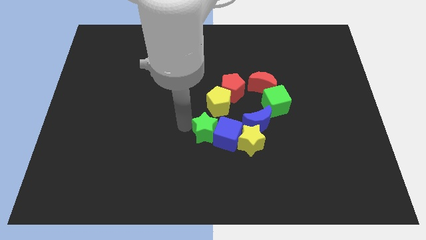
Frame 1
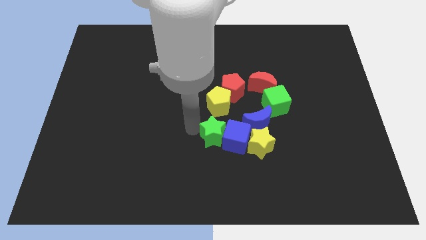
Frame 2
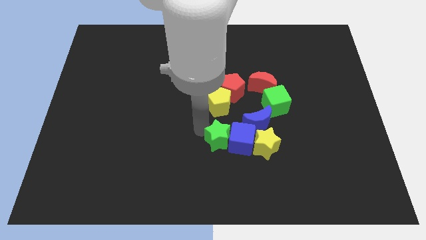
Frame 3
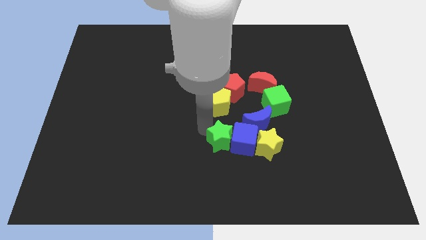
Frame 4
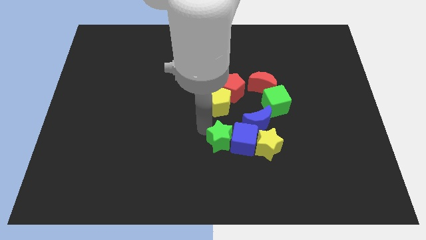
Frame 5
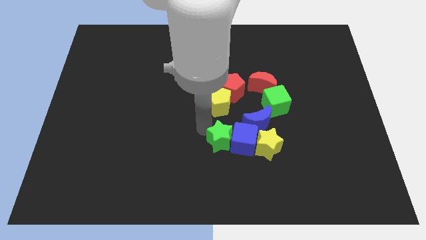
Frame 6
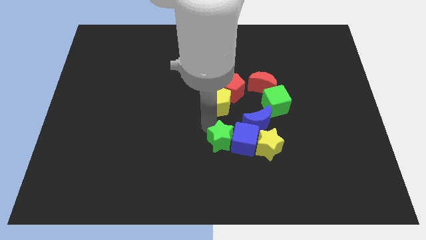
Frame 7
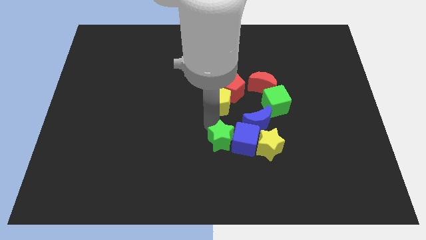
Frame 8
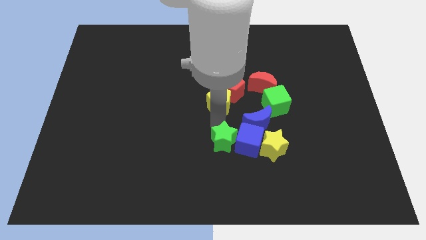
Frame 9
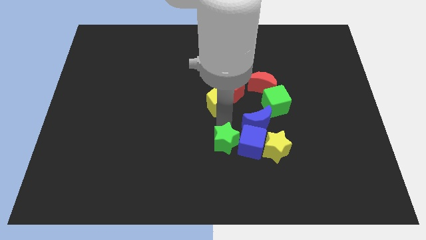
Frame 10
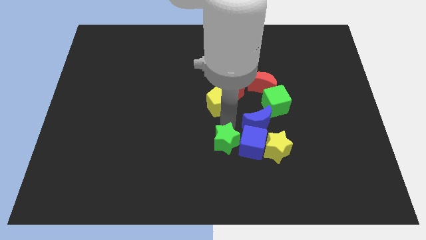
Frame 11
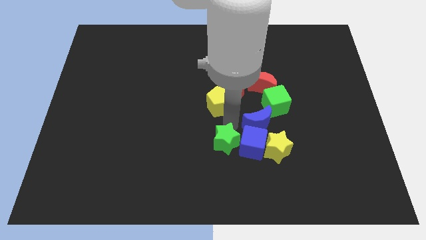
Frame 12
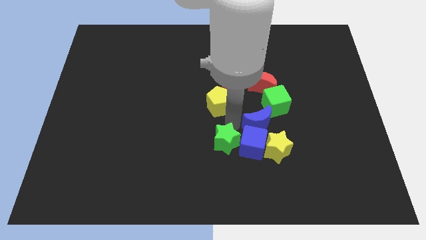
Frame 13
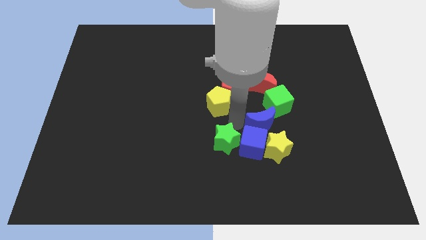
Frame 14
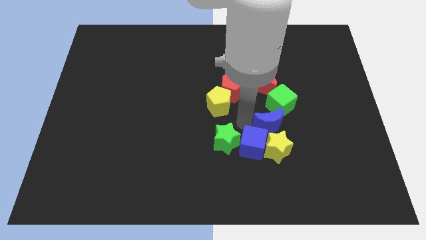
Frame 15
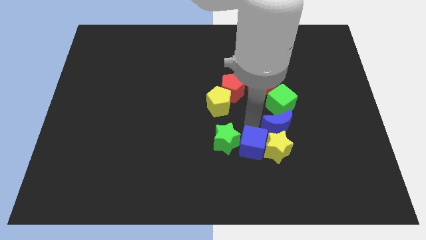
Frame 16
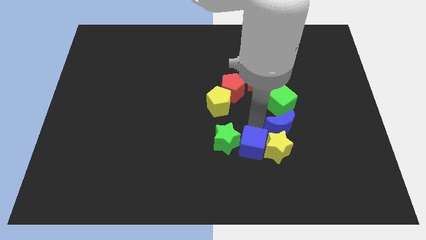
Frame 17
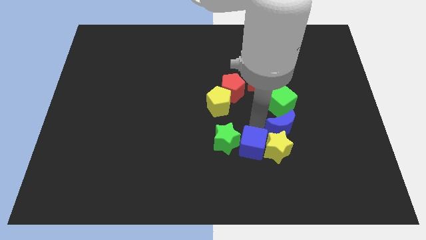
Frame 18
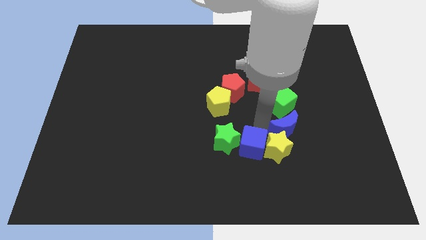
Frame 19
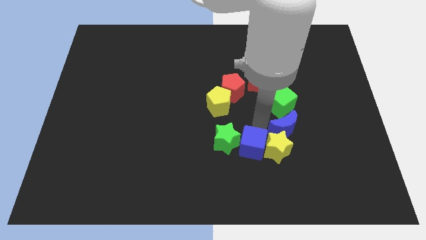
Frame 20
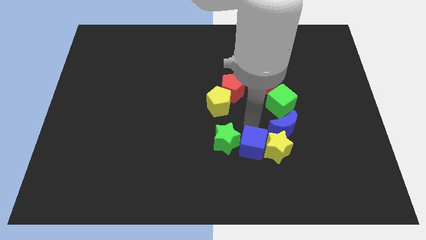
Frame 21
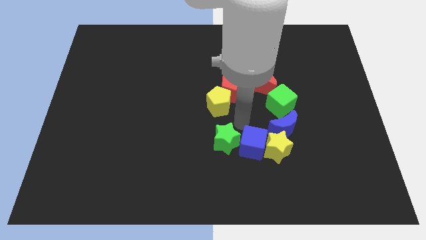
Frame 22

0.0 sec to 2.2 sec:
move blue moon in between the green cube and the yellow star

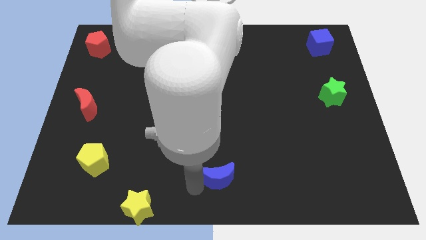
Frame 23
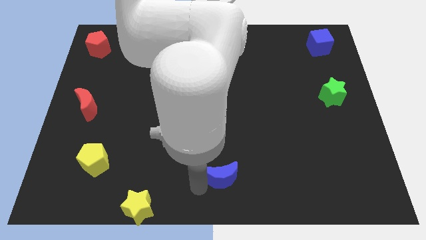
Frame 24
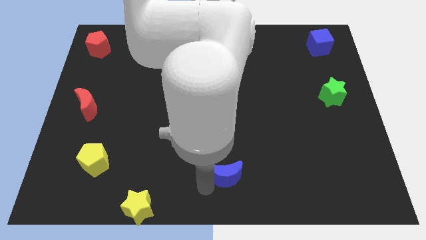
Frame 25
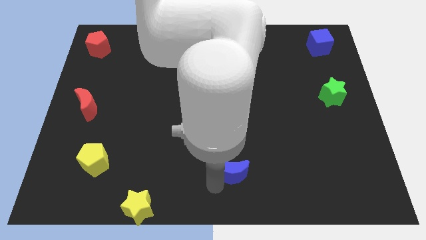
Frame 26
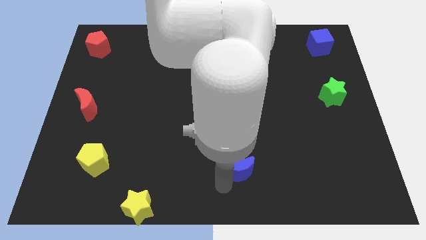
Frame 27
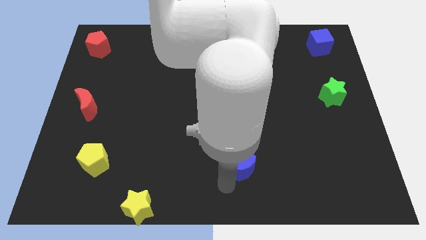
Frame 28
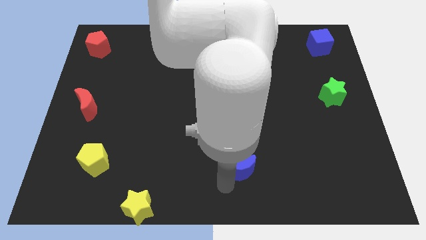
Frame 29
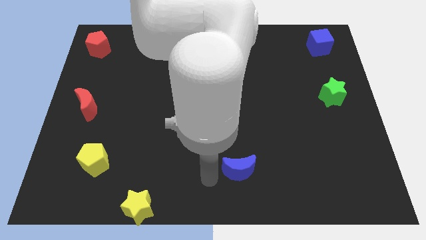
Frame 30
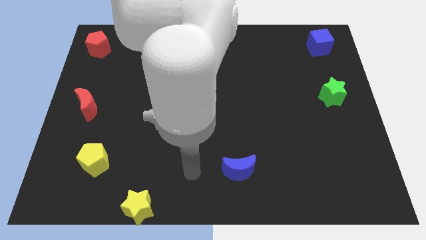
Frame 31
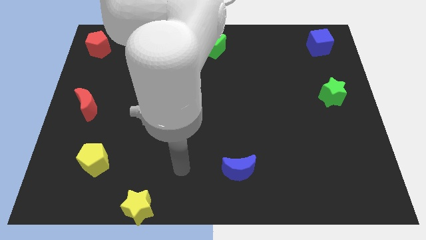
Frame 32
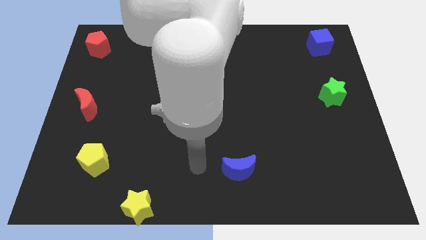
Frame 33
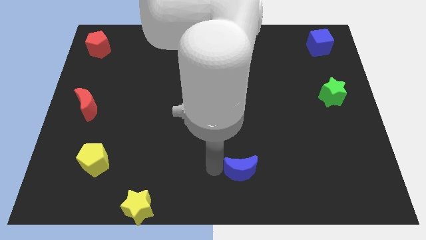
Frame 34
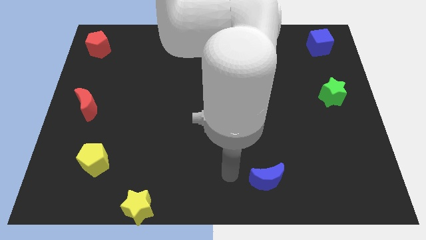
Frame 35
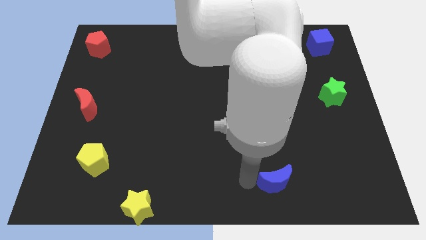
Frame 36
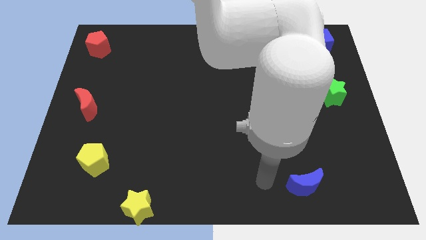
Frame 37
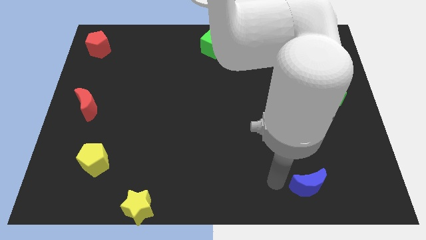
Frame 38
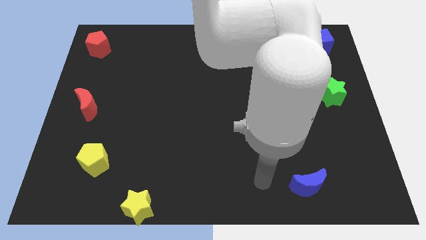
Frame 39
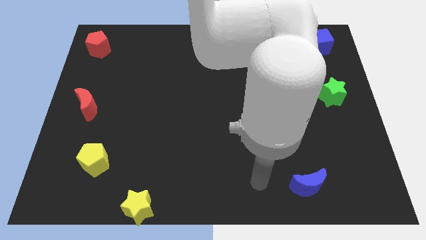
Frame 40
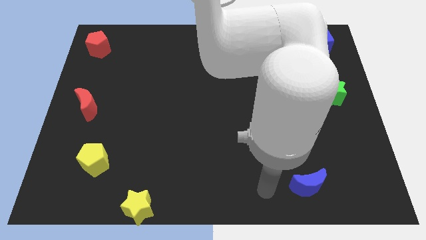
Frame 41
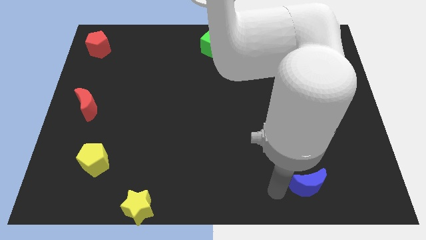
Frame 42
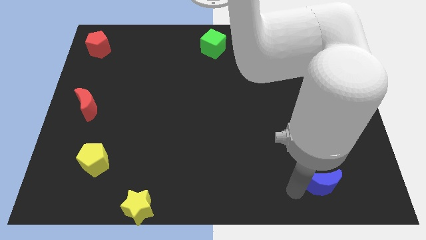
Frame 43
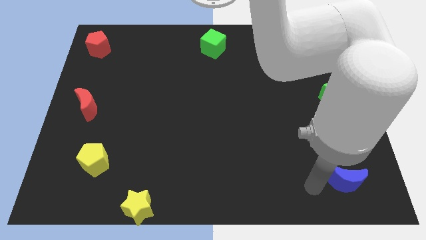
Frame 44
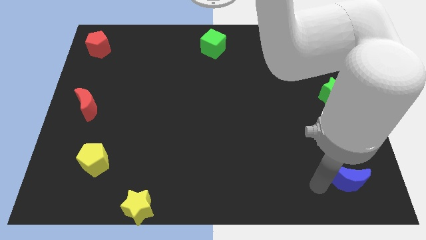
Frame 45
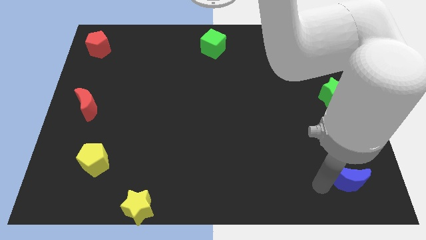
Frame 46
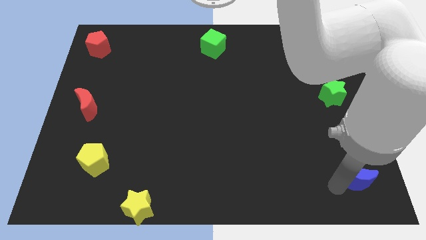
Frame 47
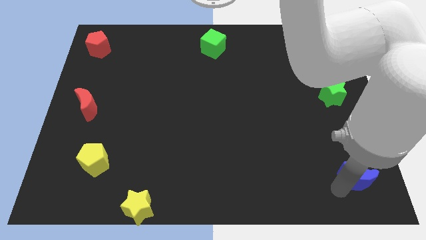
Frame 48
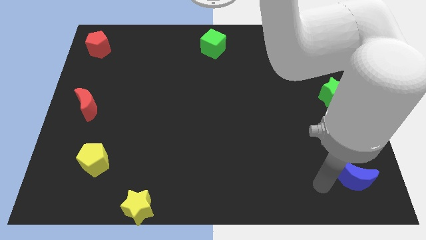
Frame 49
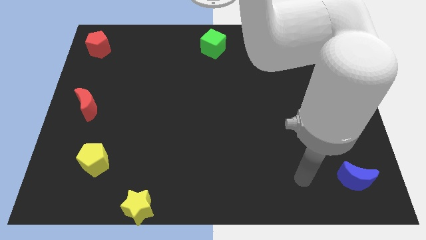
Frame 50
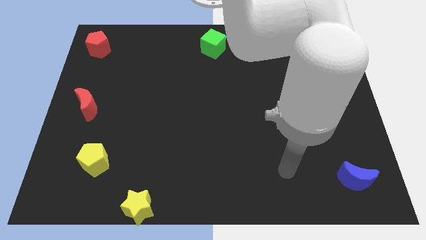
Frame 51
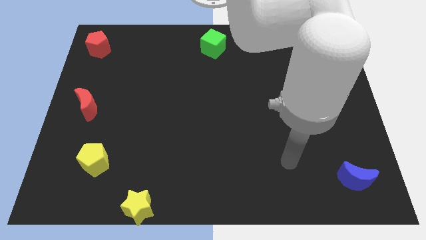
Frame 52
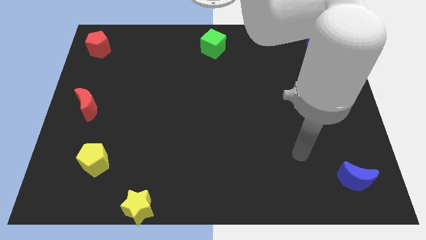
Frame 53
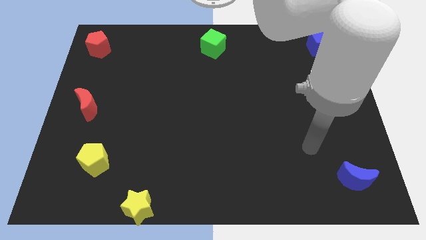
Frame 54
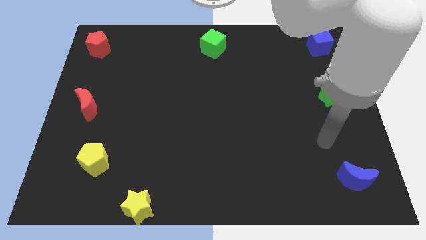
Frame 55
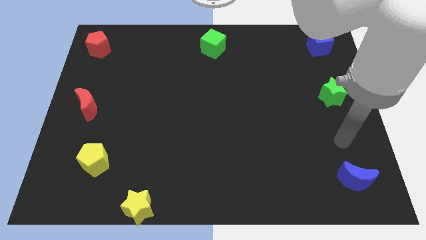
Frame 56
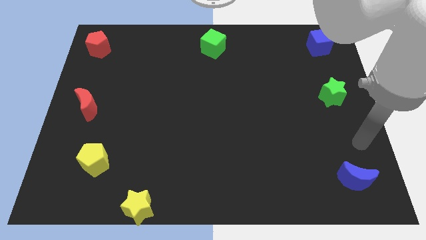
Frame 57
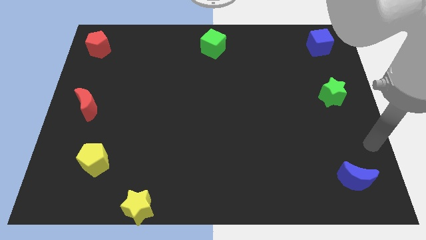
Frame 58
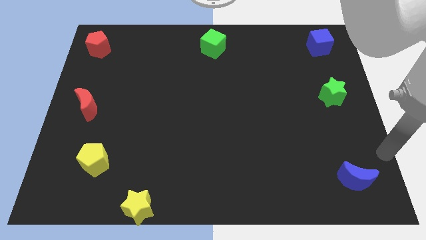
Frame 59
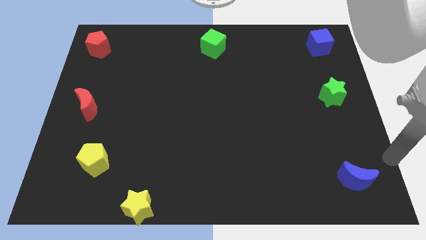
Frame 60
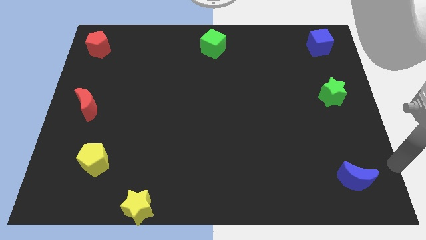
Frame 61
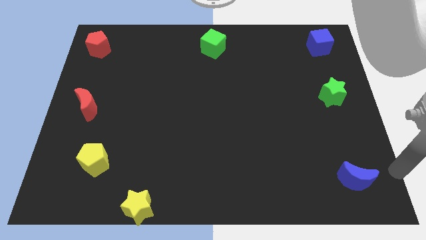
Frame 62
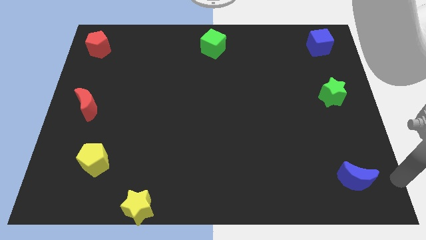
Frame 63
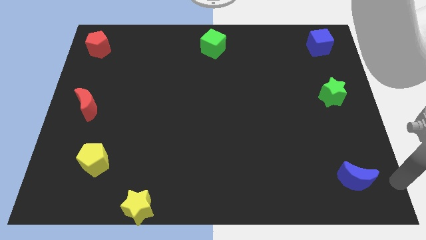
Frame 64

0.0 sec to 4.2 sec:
push the blue moon towards the bottom right

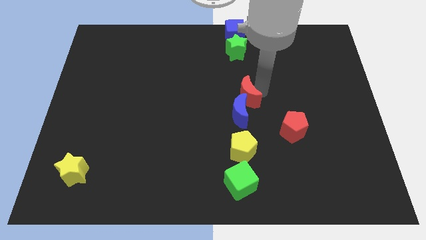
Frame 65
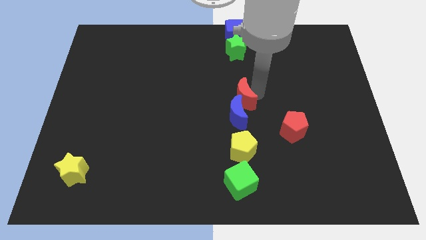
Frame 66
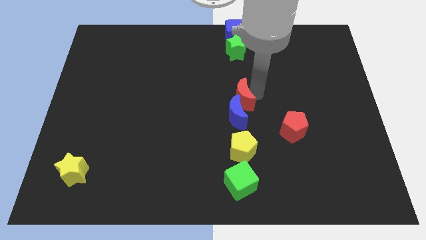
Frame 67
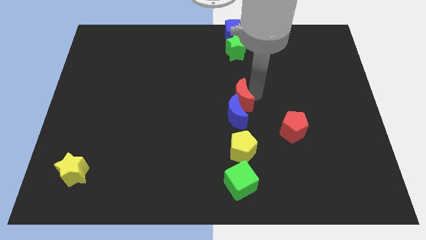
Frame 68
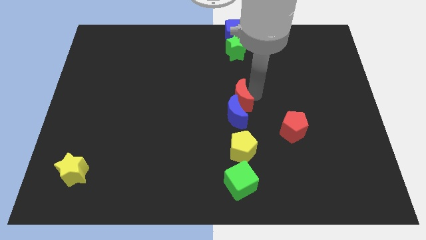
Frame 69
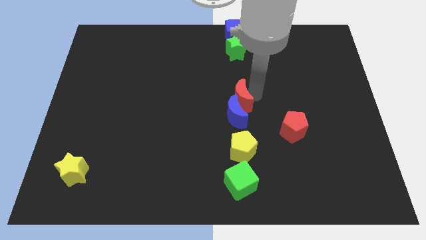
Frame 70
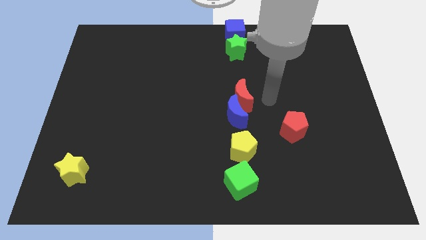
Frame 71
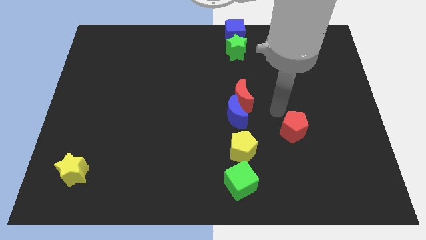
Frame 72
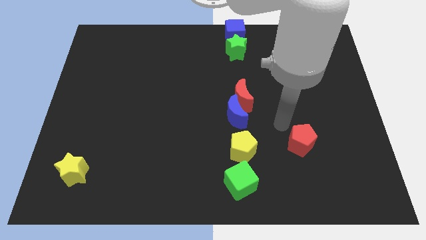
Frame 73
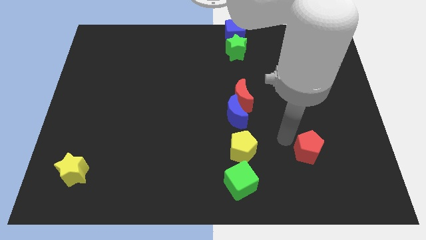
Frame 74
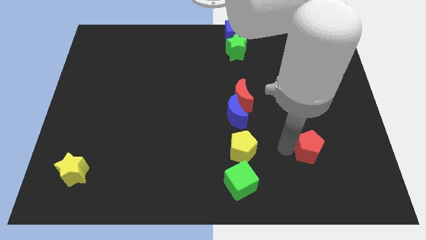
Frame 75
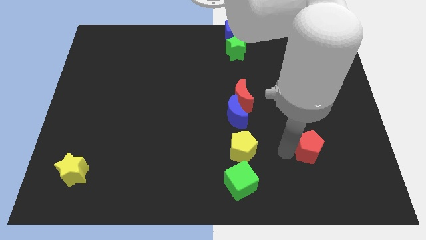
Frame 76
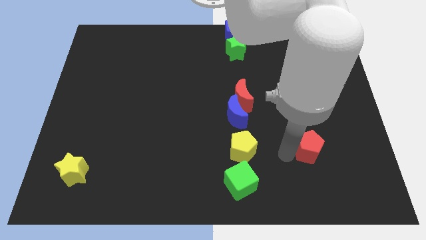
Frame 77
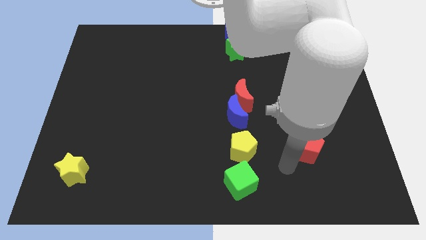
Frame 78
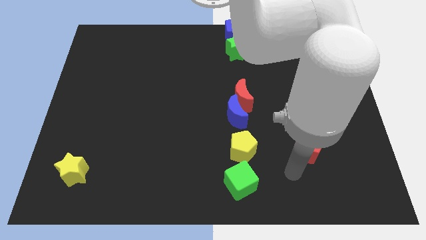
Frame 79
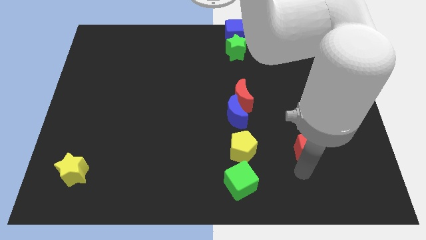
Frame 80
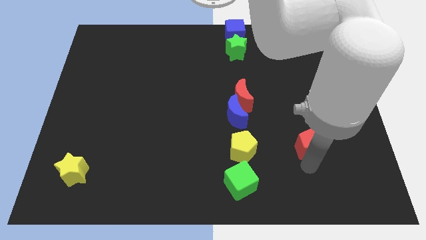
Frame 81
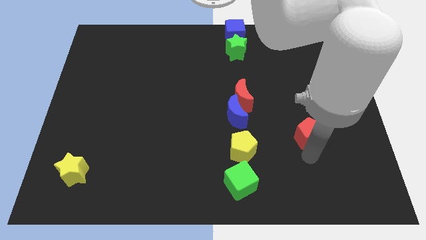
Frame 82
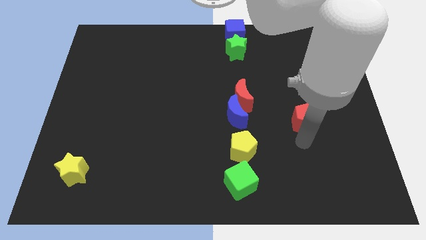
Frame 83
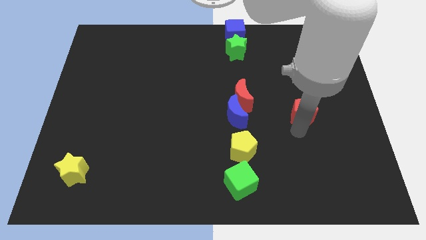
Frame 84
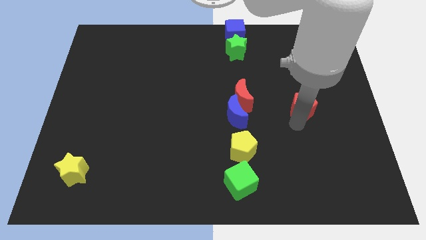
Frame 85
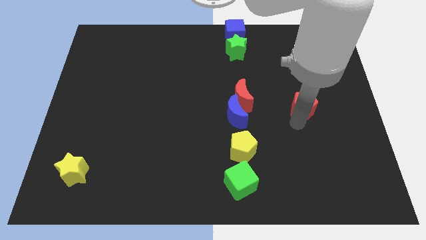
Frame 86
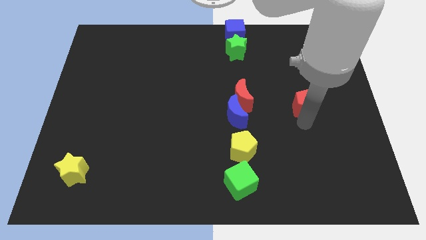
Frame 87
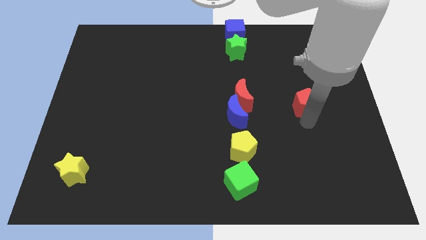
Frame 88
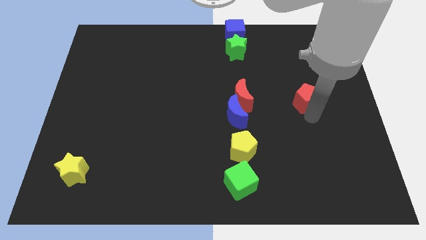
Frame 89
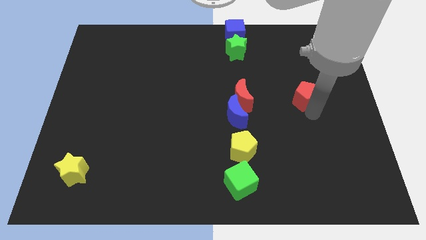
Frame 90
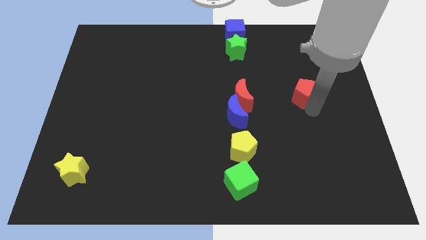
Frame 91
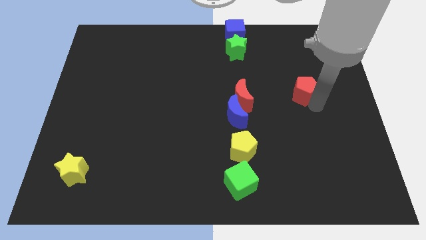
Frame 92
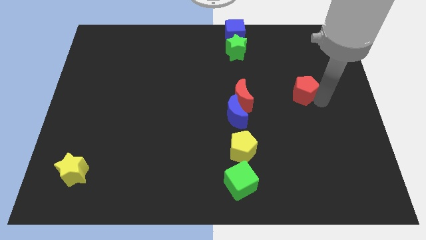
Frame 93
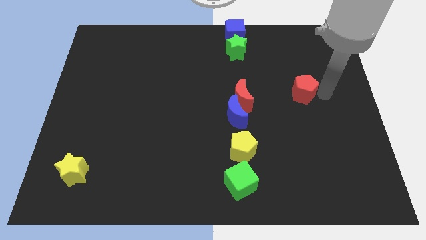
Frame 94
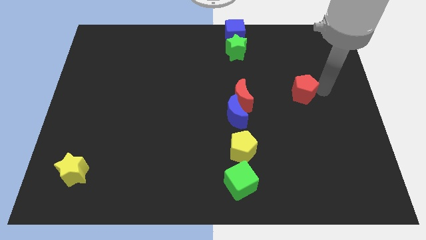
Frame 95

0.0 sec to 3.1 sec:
move the red pentagon to the right of the board
